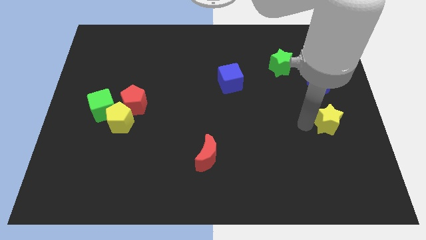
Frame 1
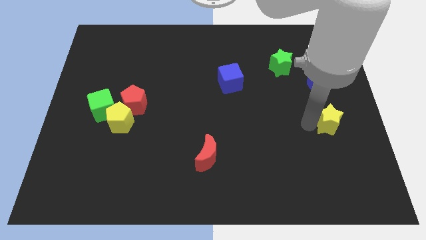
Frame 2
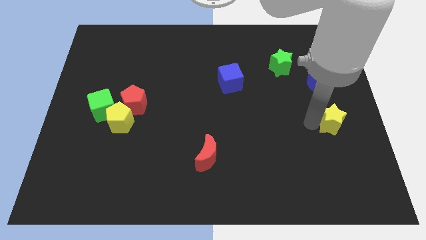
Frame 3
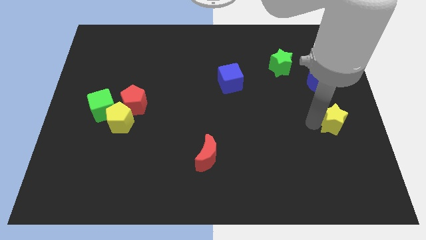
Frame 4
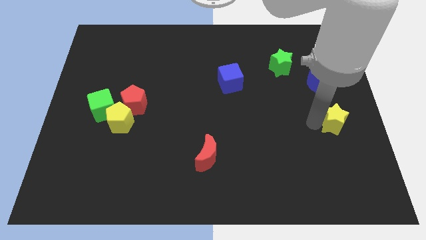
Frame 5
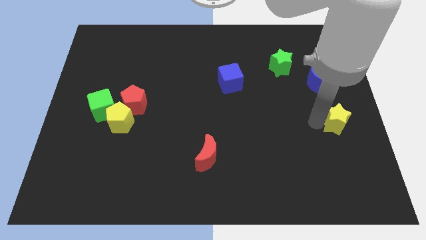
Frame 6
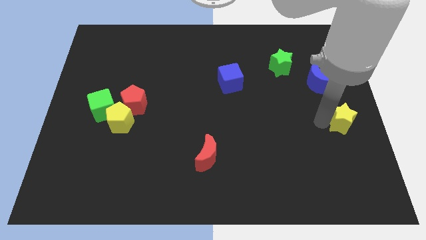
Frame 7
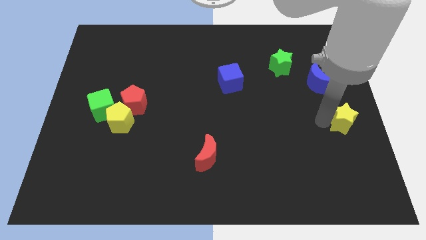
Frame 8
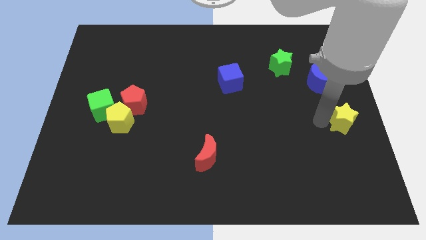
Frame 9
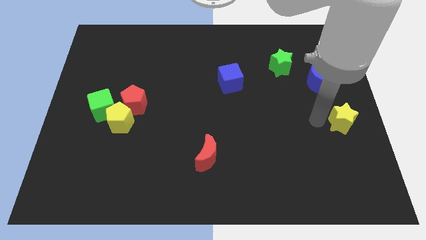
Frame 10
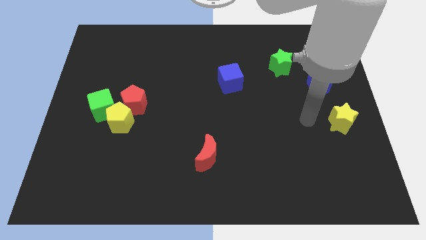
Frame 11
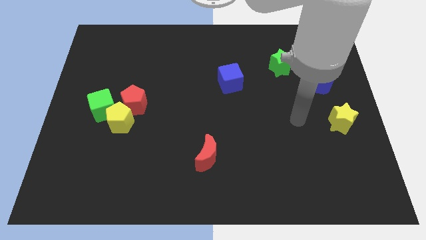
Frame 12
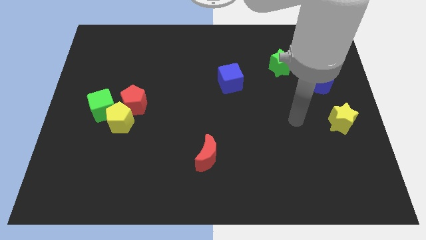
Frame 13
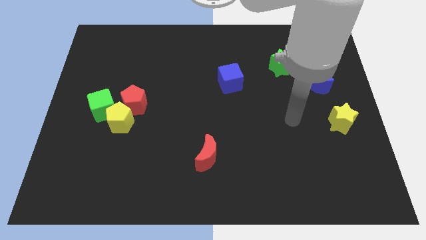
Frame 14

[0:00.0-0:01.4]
slightly push the yellow star towards the center right

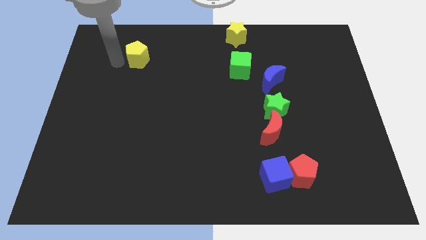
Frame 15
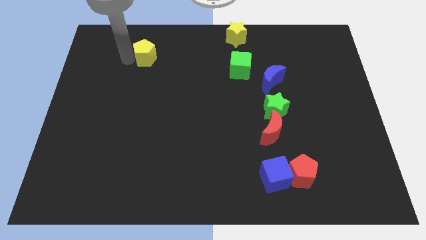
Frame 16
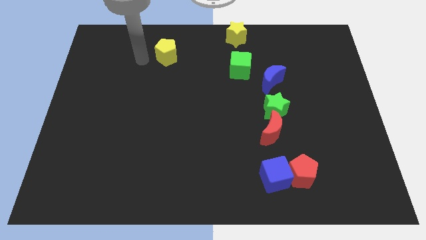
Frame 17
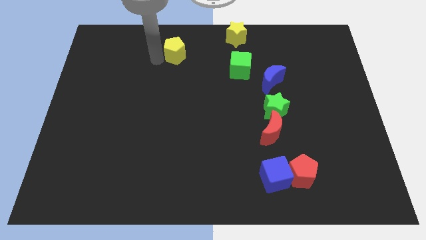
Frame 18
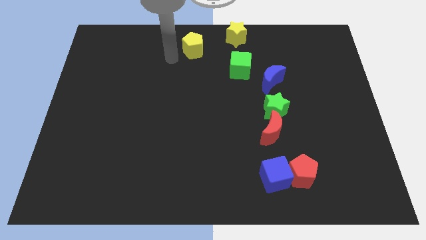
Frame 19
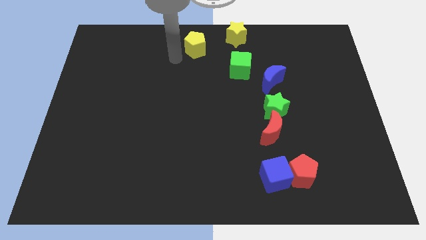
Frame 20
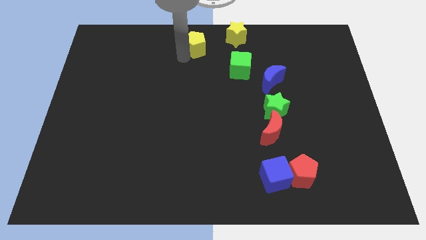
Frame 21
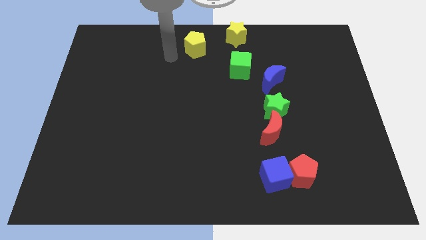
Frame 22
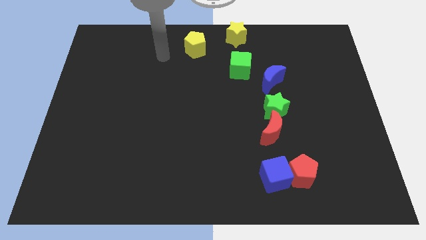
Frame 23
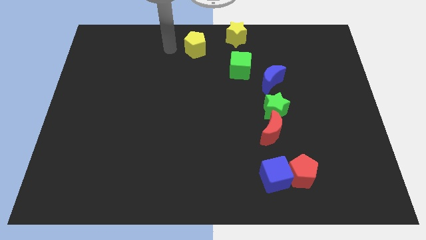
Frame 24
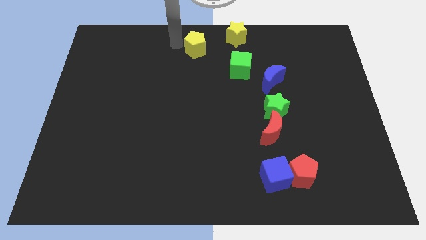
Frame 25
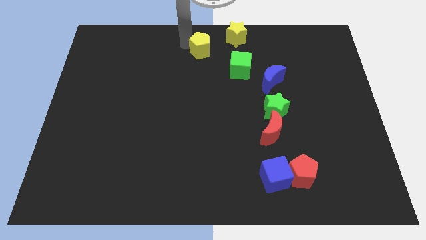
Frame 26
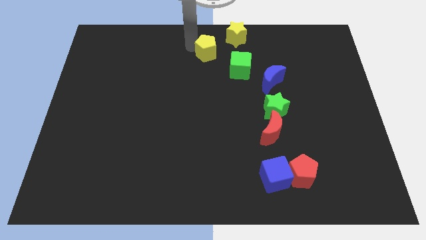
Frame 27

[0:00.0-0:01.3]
move the yellow pentagon near to the yellow star

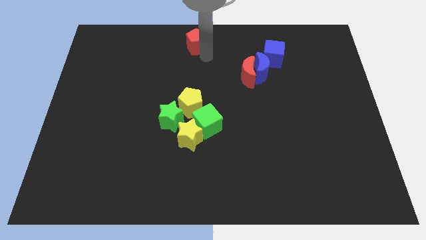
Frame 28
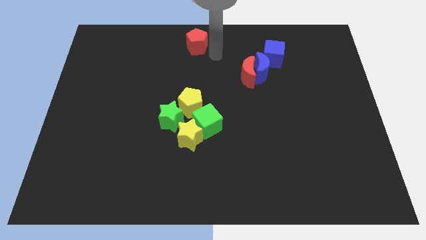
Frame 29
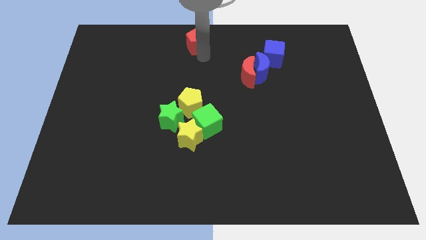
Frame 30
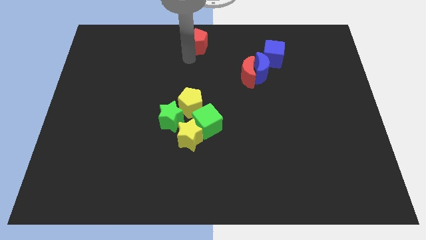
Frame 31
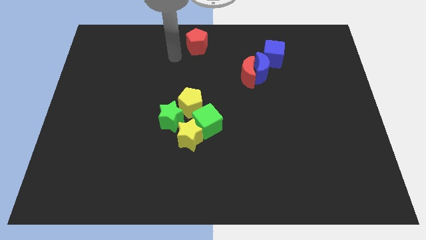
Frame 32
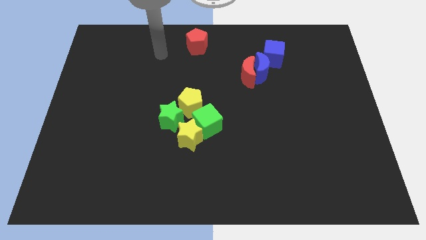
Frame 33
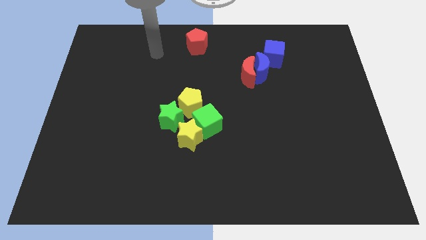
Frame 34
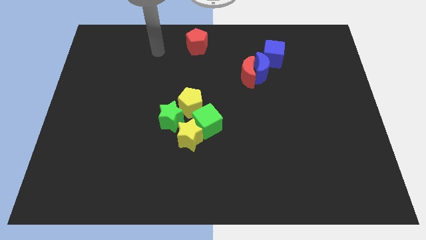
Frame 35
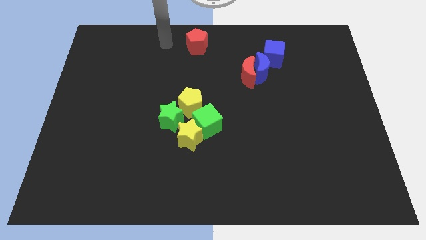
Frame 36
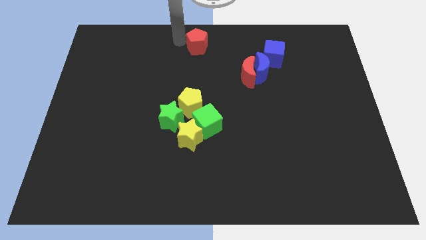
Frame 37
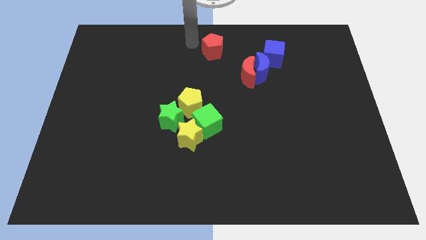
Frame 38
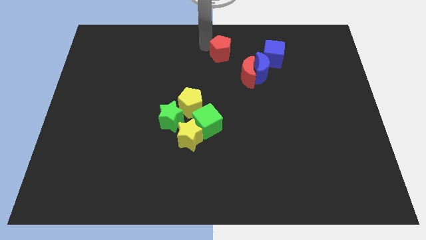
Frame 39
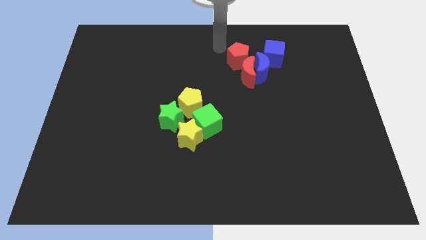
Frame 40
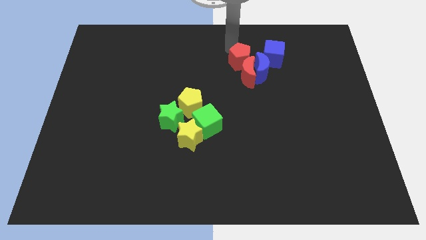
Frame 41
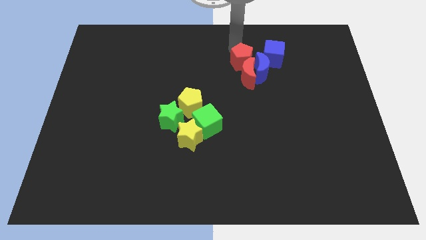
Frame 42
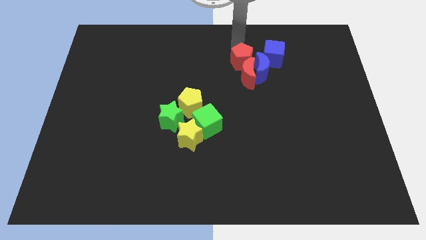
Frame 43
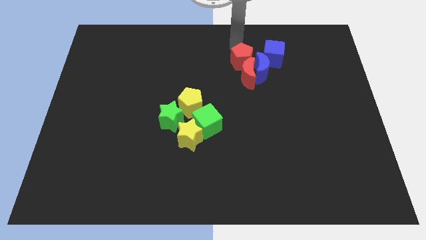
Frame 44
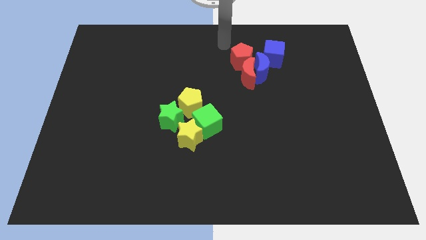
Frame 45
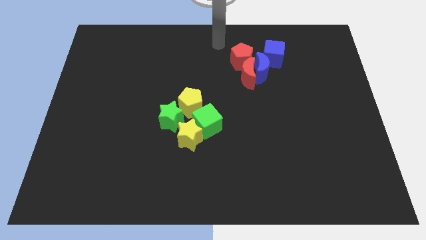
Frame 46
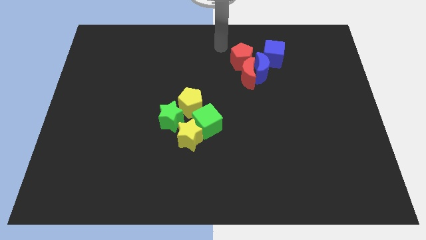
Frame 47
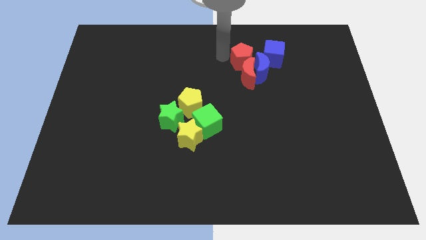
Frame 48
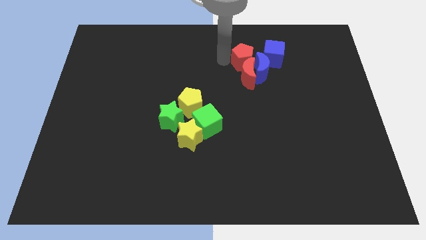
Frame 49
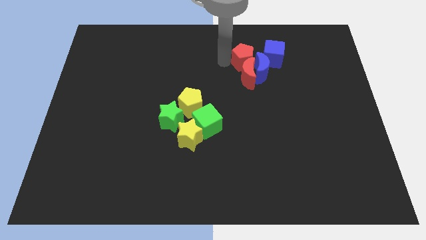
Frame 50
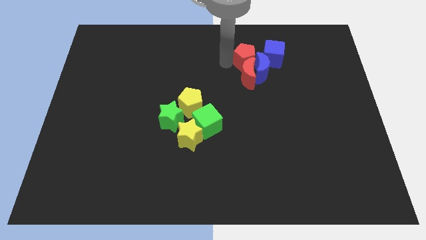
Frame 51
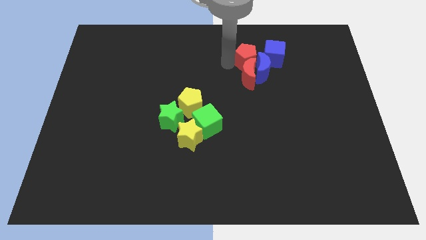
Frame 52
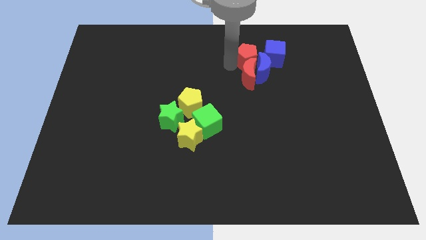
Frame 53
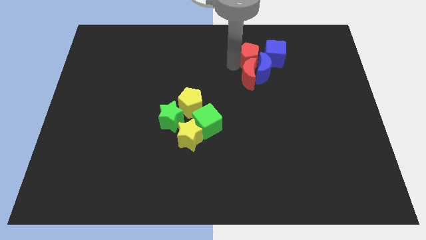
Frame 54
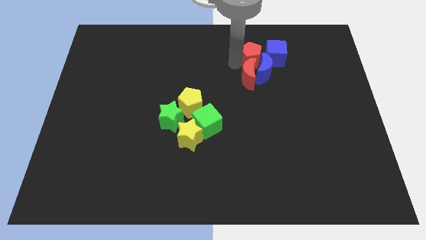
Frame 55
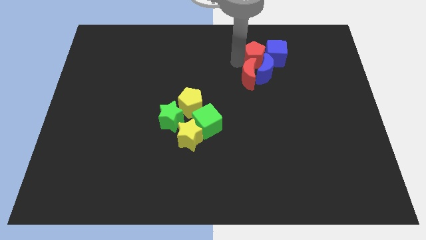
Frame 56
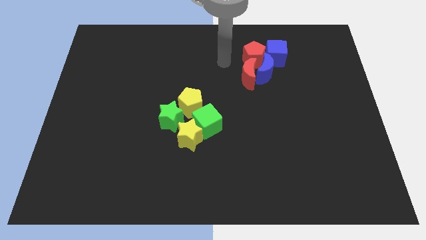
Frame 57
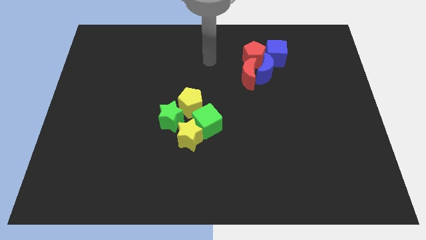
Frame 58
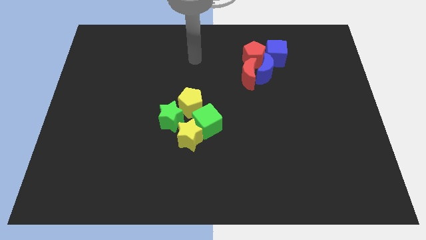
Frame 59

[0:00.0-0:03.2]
move red pentagon to the left of blue cube

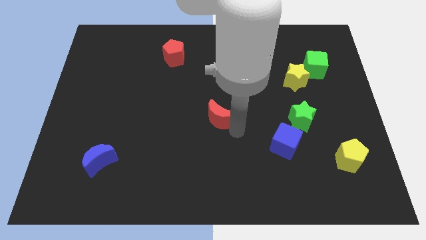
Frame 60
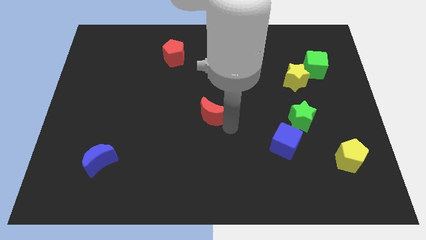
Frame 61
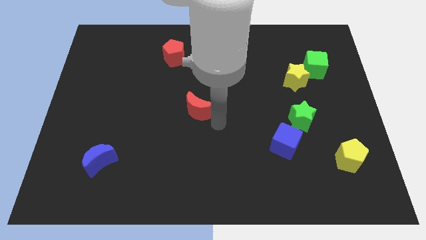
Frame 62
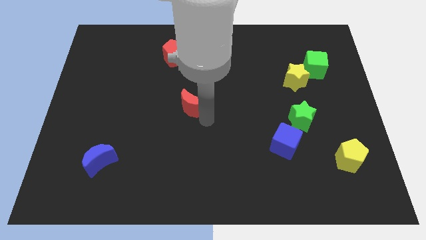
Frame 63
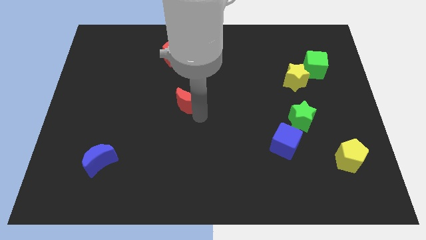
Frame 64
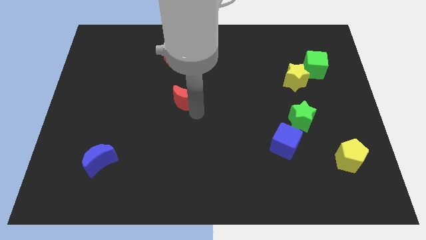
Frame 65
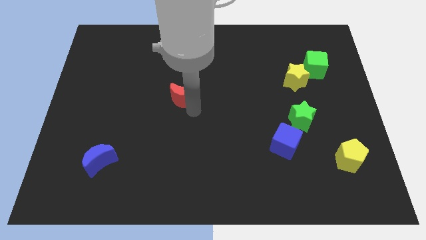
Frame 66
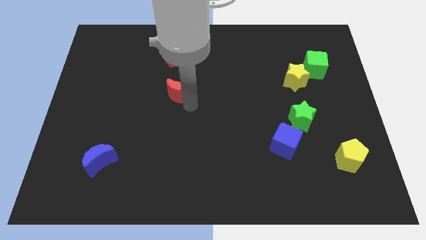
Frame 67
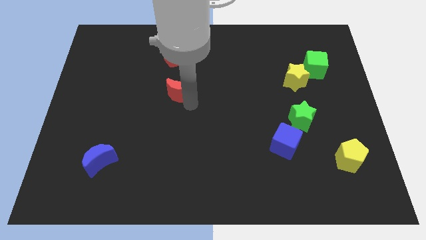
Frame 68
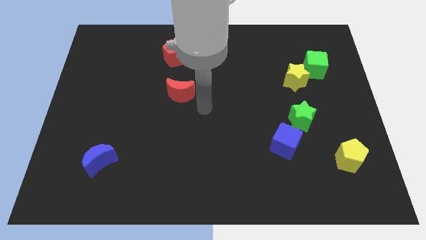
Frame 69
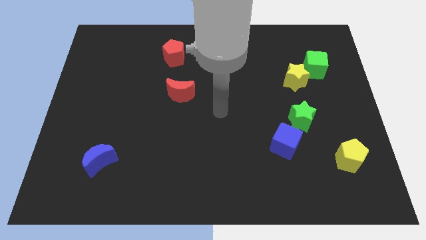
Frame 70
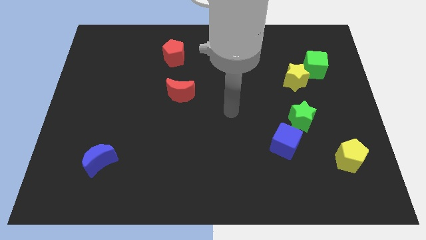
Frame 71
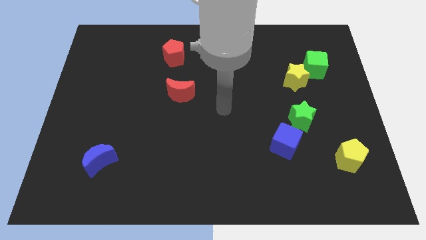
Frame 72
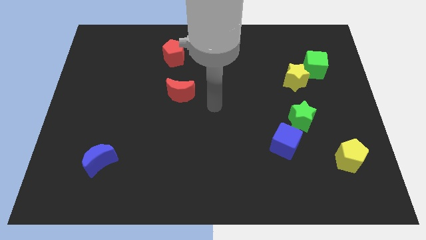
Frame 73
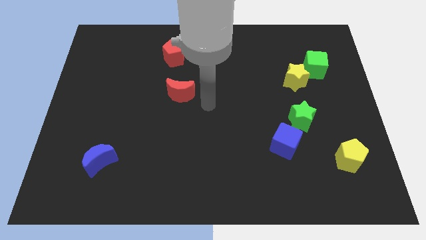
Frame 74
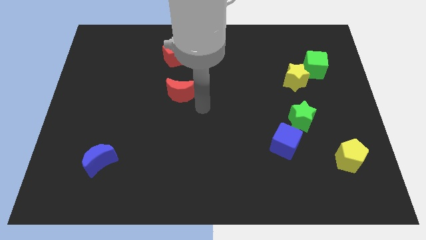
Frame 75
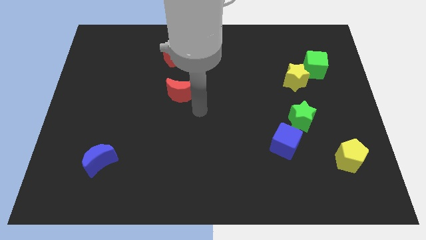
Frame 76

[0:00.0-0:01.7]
push red crescent towards red pentagon

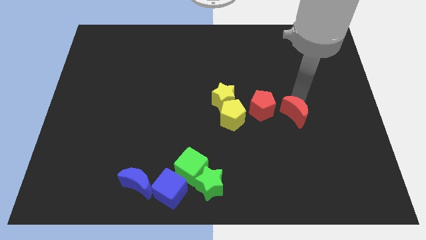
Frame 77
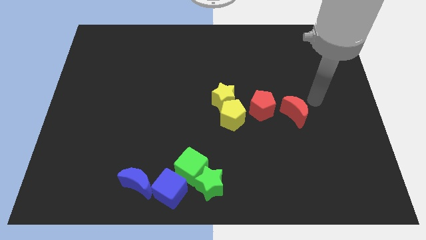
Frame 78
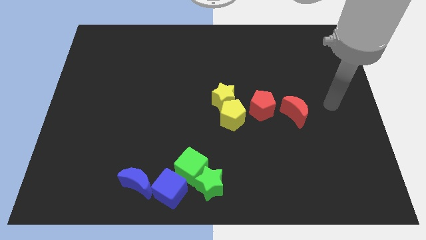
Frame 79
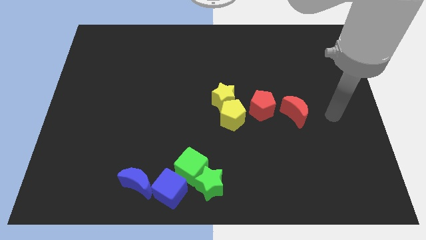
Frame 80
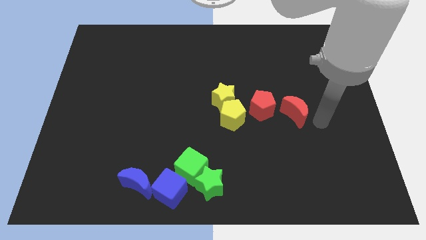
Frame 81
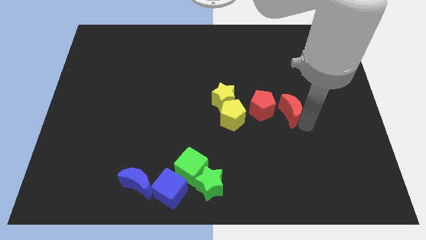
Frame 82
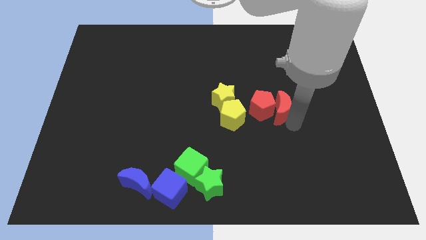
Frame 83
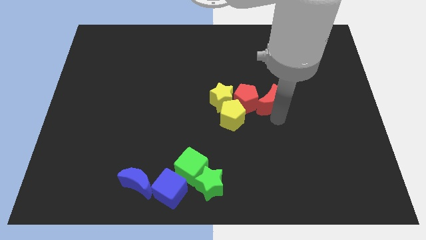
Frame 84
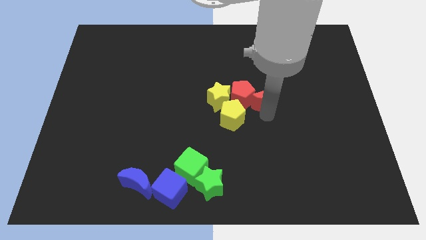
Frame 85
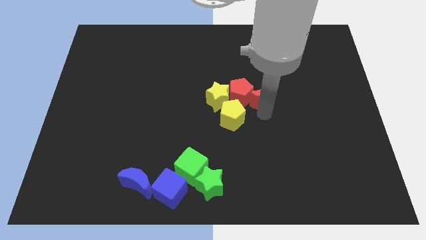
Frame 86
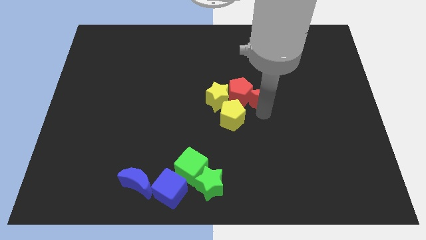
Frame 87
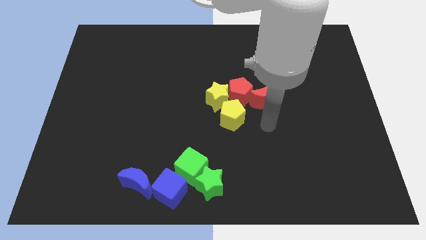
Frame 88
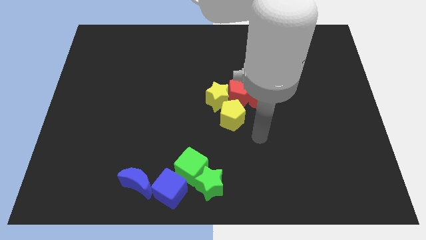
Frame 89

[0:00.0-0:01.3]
push the red crescent into the red pentagon
